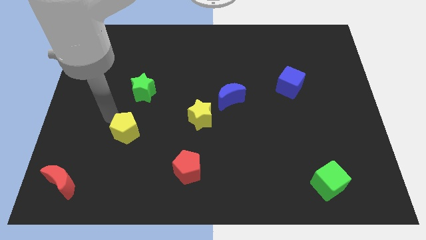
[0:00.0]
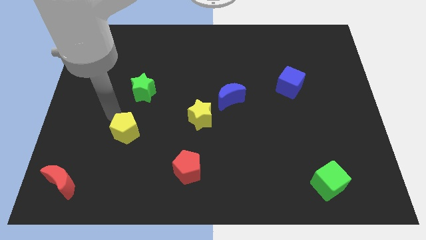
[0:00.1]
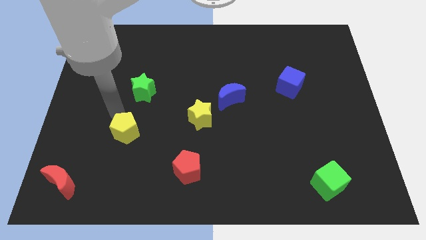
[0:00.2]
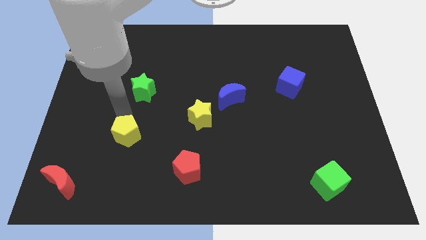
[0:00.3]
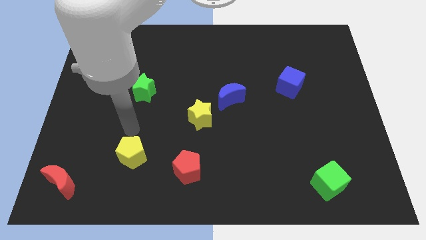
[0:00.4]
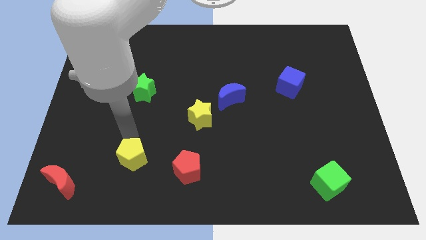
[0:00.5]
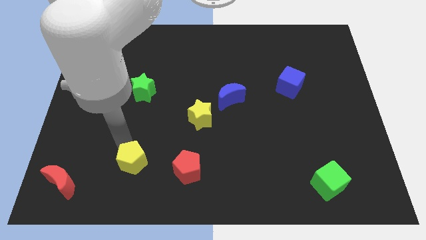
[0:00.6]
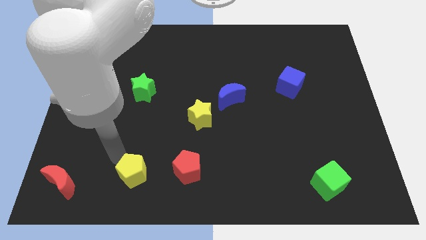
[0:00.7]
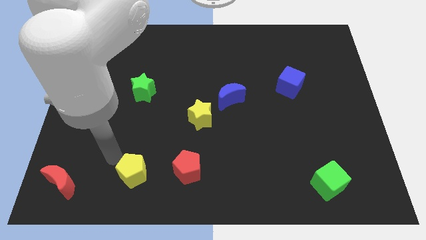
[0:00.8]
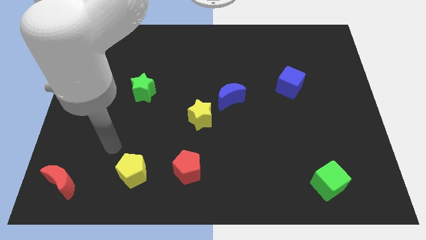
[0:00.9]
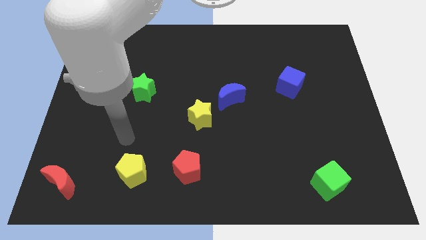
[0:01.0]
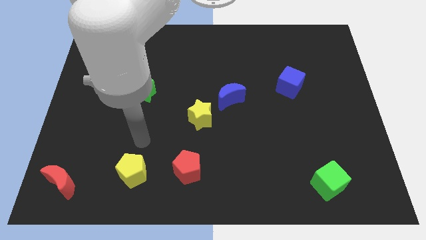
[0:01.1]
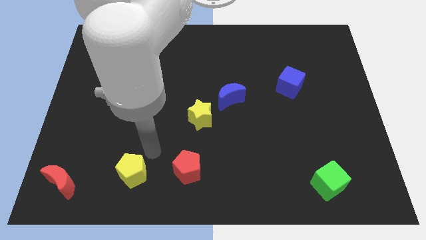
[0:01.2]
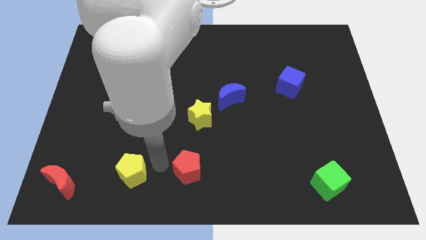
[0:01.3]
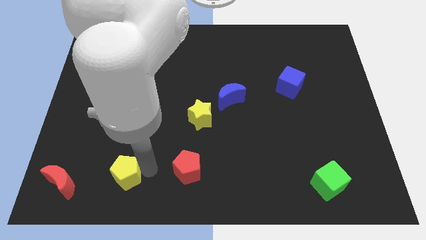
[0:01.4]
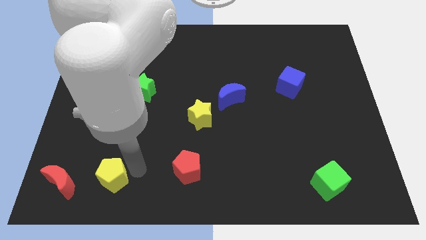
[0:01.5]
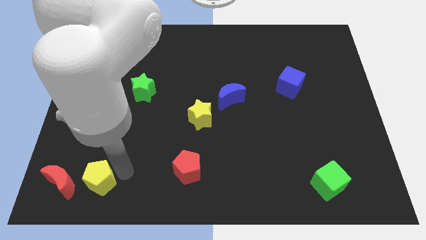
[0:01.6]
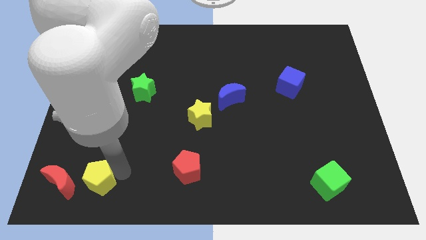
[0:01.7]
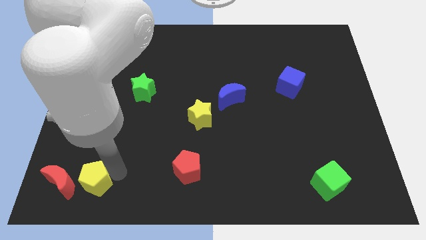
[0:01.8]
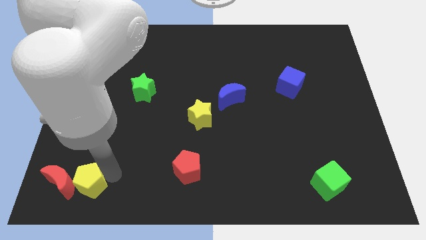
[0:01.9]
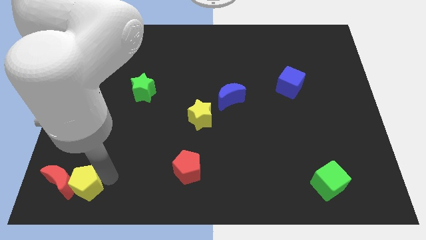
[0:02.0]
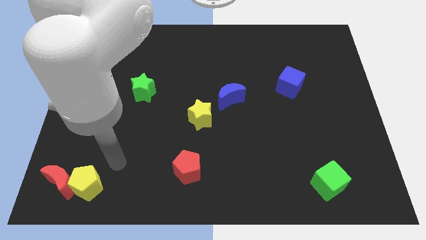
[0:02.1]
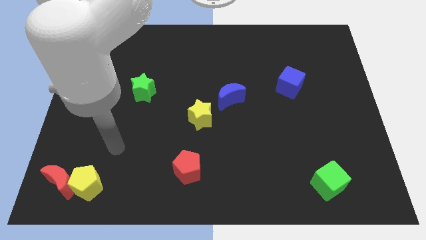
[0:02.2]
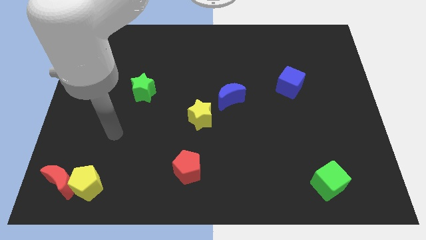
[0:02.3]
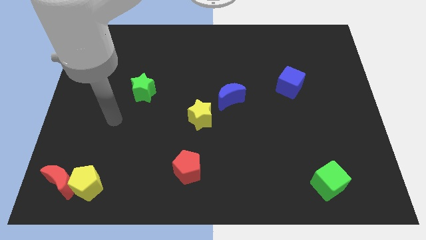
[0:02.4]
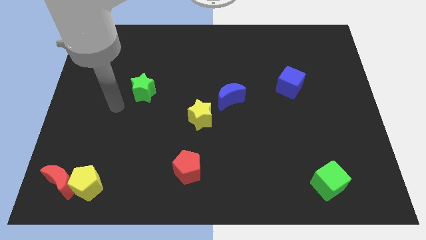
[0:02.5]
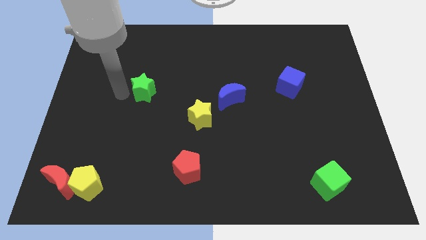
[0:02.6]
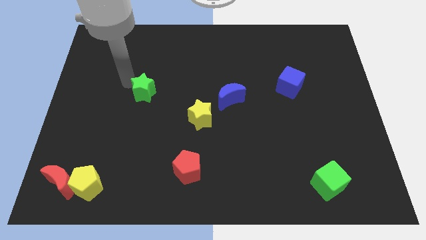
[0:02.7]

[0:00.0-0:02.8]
move the yellow pentagon to the right of the red moon

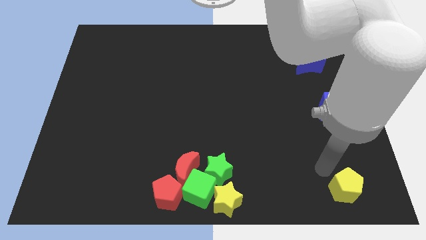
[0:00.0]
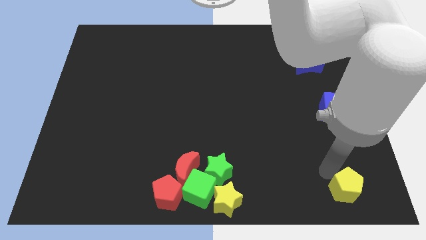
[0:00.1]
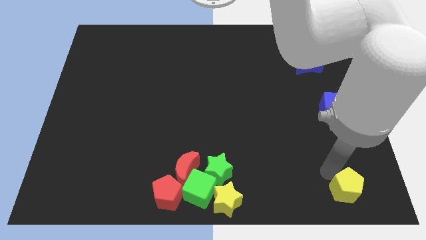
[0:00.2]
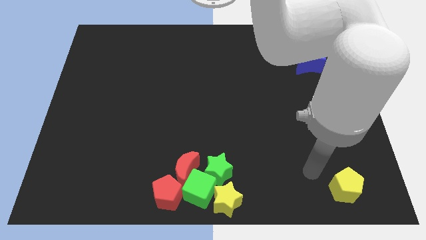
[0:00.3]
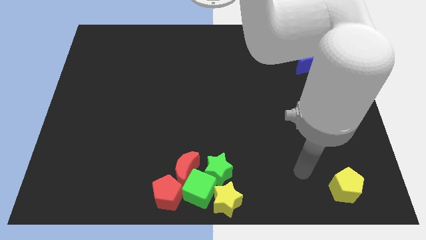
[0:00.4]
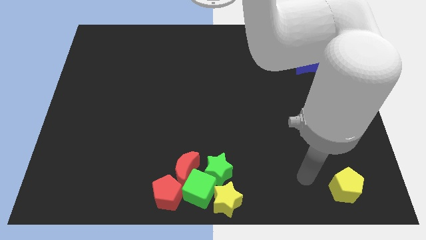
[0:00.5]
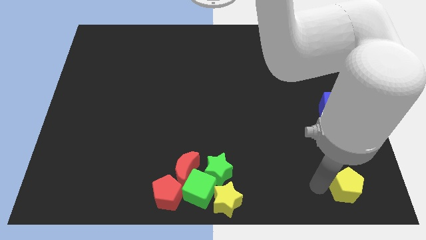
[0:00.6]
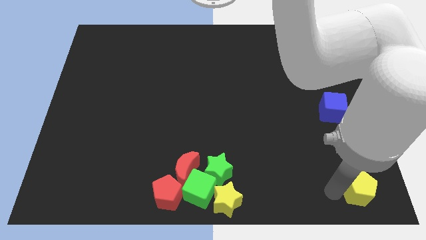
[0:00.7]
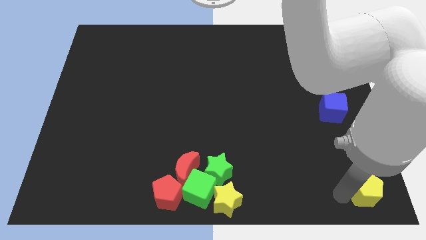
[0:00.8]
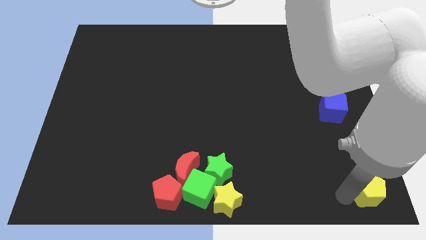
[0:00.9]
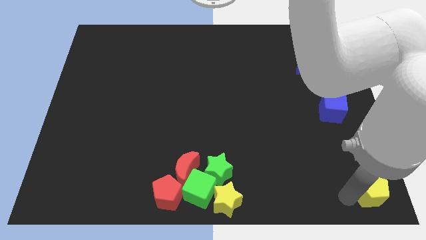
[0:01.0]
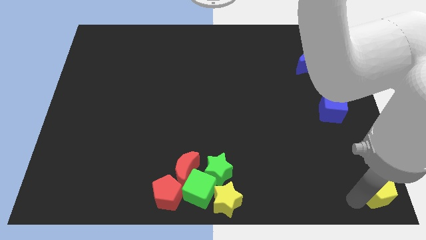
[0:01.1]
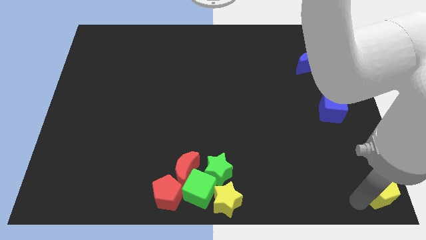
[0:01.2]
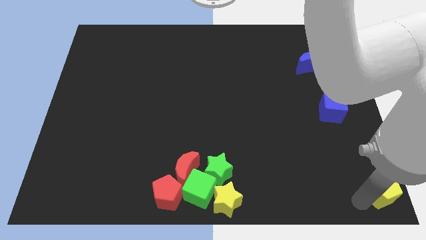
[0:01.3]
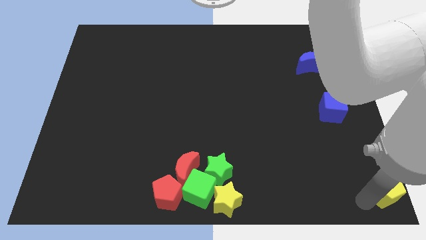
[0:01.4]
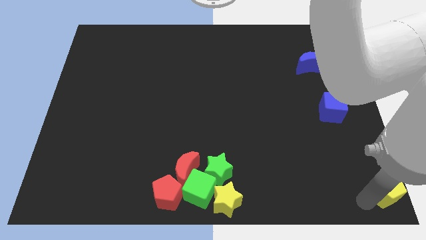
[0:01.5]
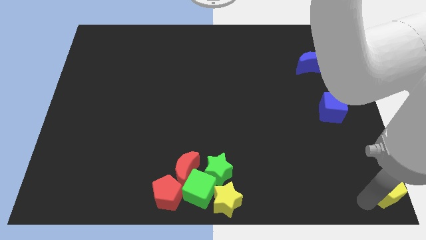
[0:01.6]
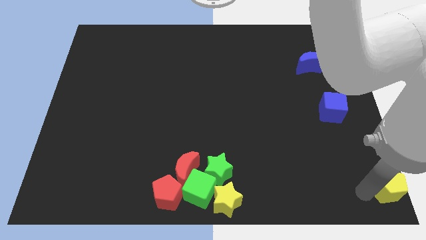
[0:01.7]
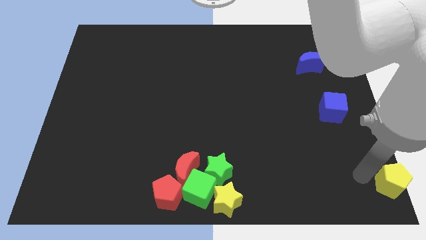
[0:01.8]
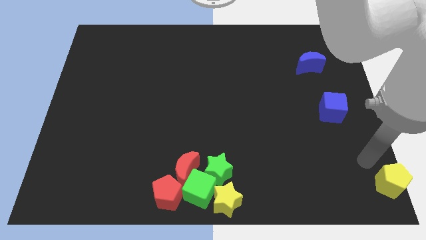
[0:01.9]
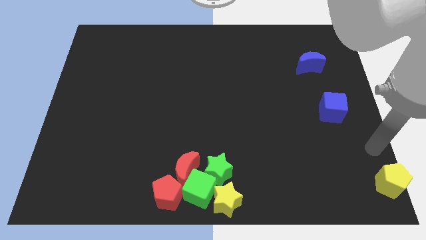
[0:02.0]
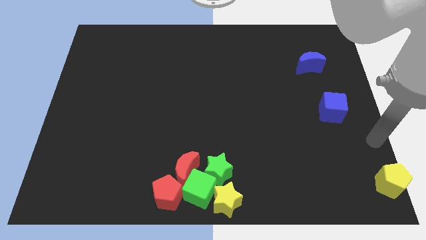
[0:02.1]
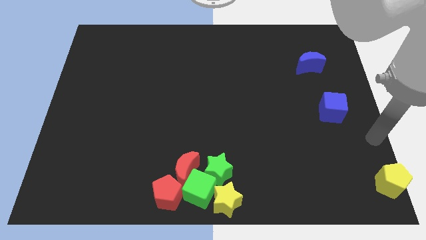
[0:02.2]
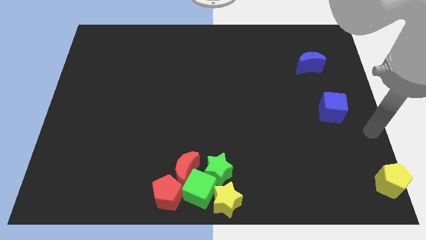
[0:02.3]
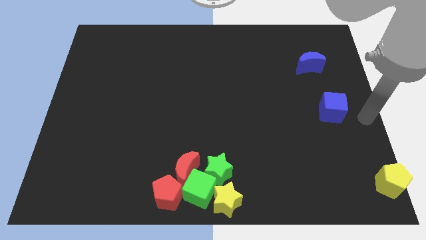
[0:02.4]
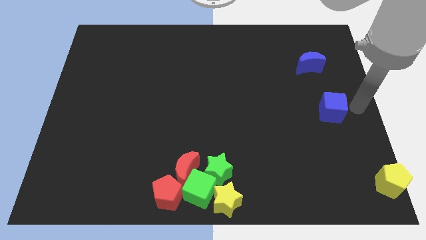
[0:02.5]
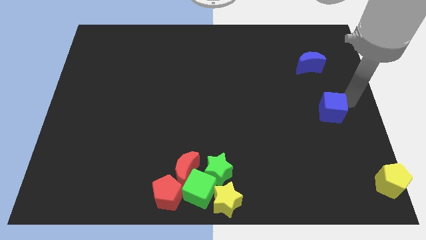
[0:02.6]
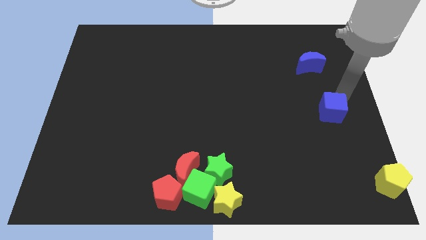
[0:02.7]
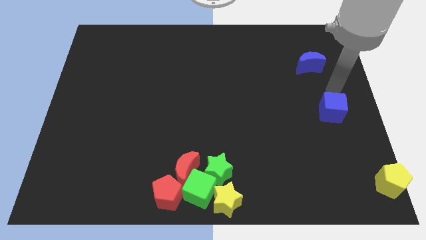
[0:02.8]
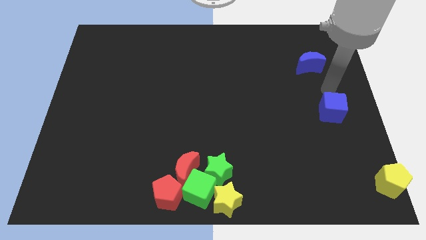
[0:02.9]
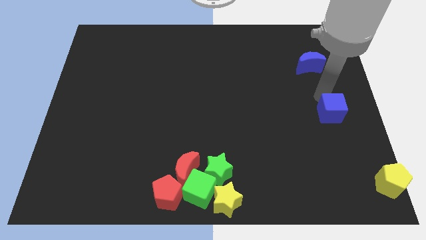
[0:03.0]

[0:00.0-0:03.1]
push the yellow pentagon horizontally right of the group in the bottom right

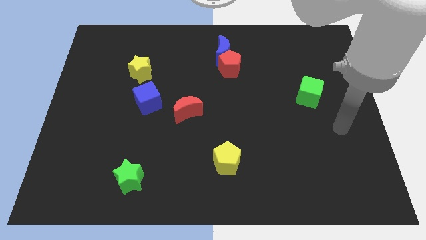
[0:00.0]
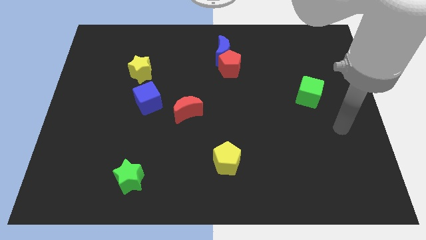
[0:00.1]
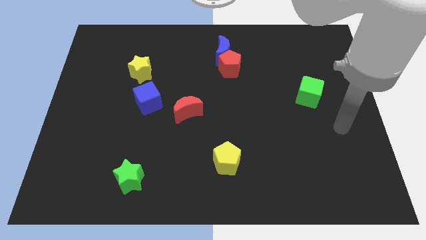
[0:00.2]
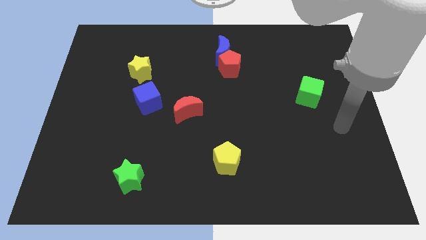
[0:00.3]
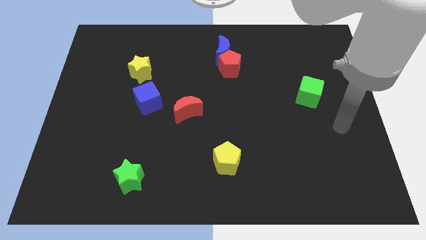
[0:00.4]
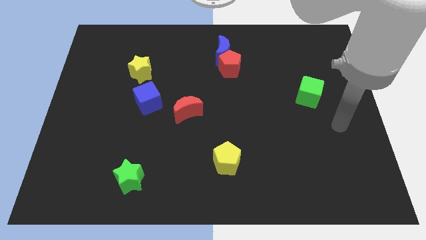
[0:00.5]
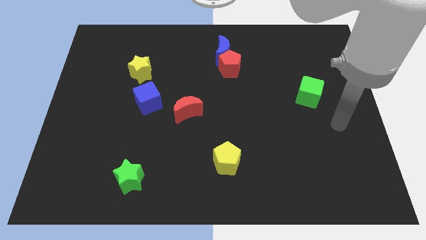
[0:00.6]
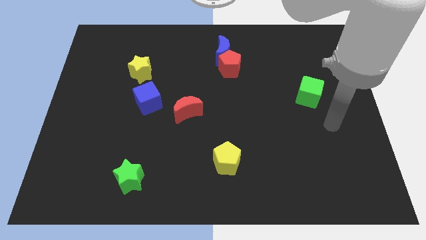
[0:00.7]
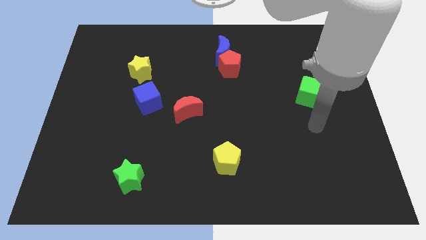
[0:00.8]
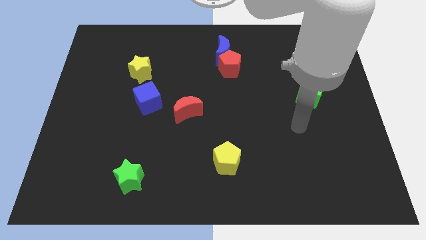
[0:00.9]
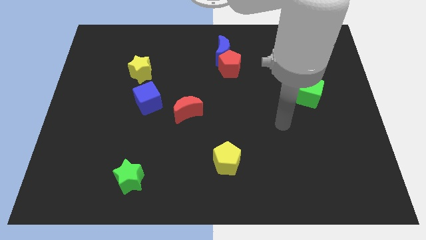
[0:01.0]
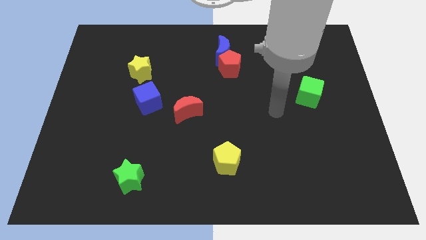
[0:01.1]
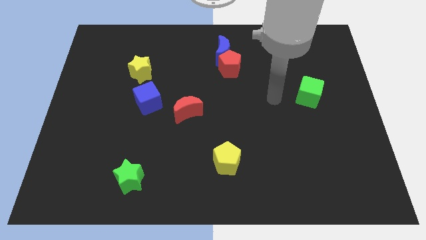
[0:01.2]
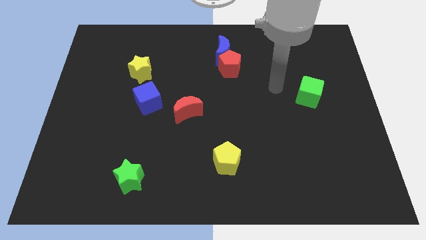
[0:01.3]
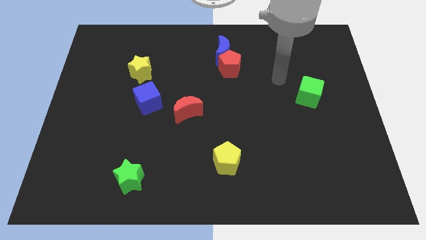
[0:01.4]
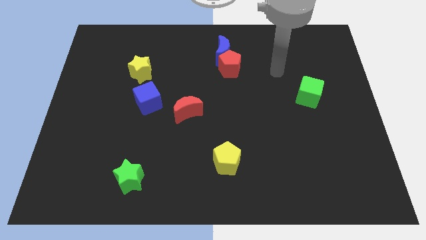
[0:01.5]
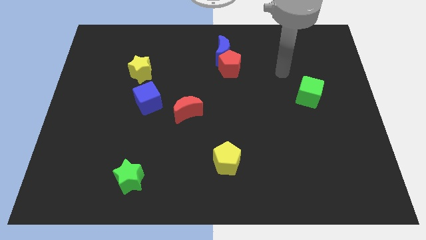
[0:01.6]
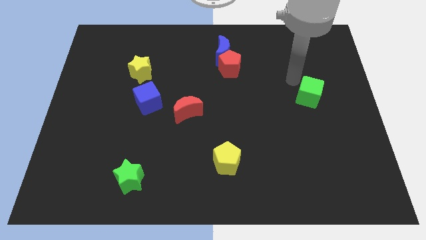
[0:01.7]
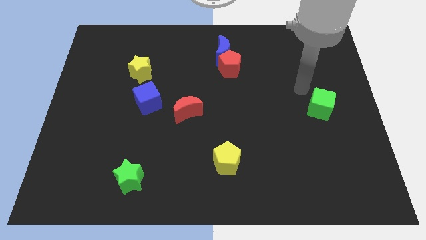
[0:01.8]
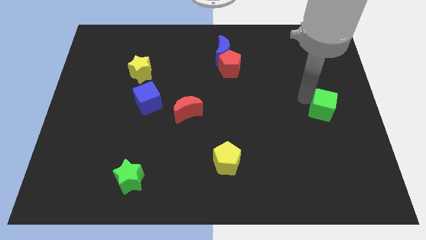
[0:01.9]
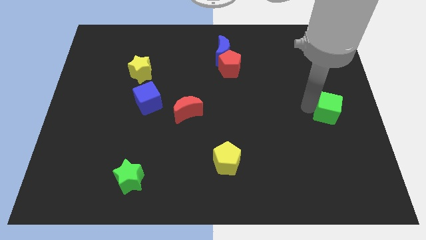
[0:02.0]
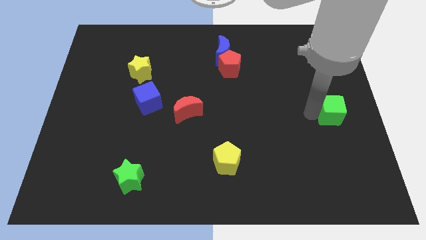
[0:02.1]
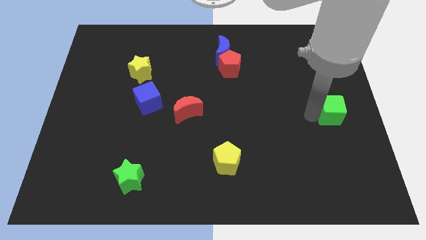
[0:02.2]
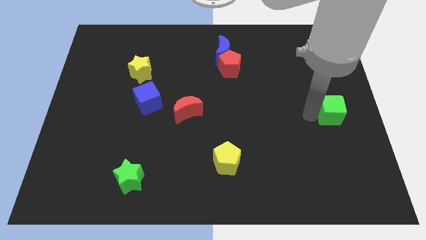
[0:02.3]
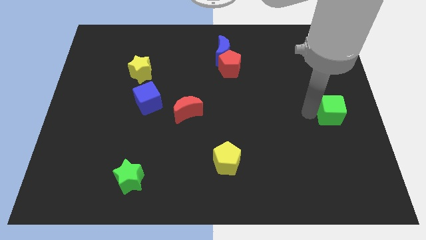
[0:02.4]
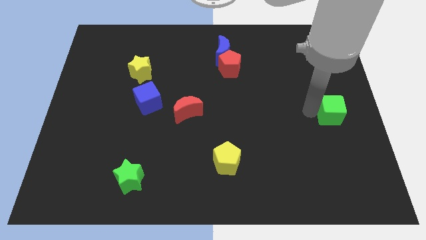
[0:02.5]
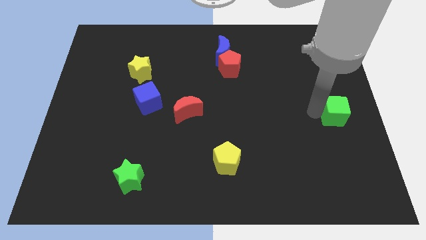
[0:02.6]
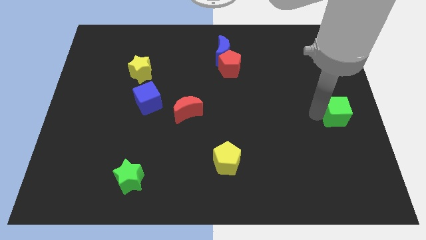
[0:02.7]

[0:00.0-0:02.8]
push the green cube to the right side of the board

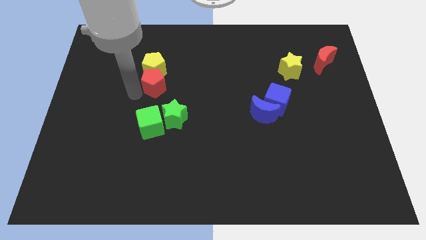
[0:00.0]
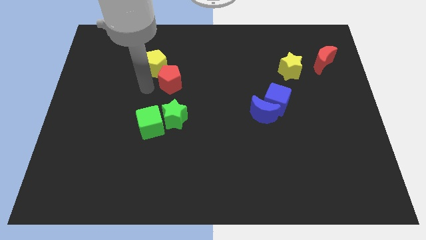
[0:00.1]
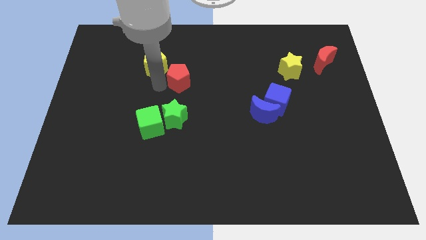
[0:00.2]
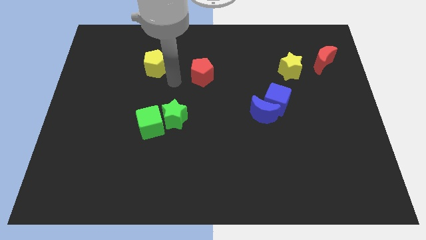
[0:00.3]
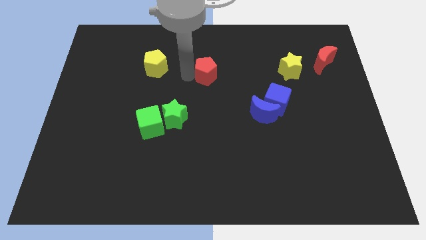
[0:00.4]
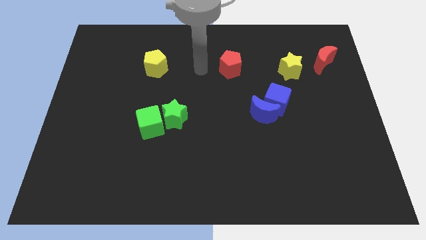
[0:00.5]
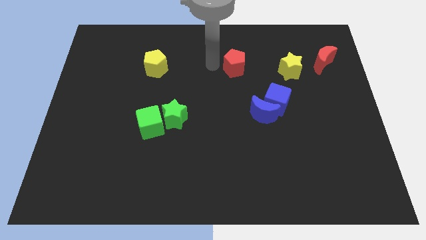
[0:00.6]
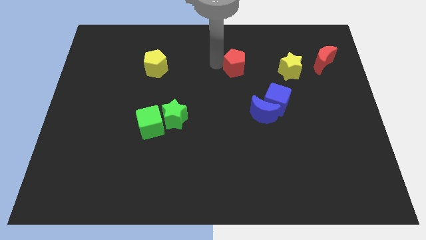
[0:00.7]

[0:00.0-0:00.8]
place the red pentagon in between the yellow blocks
